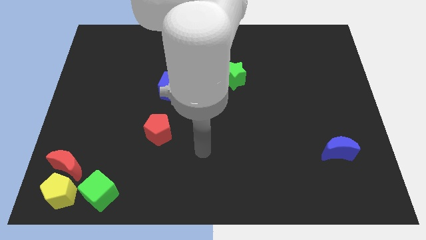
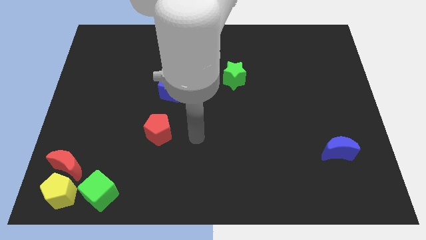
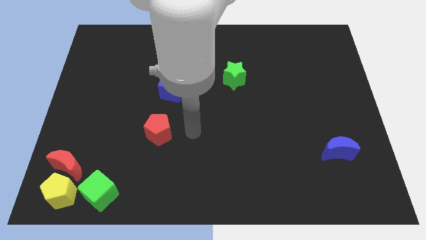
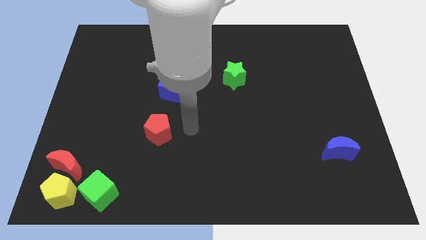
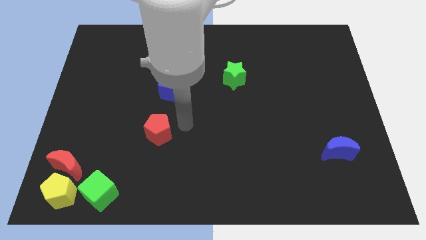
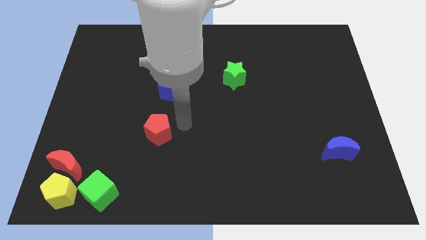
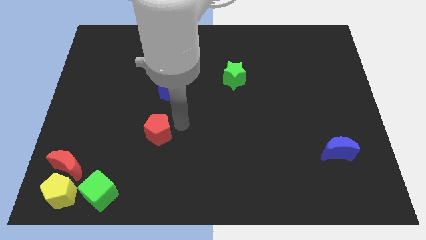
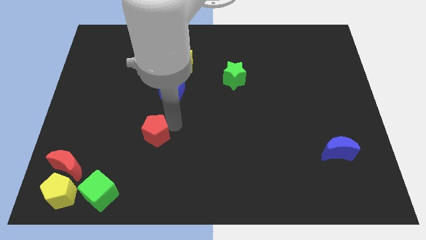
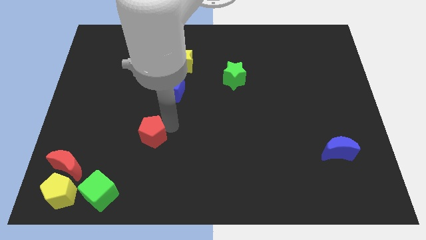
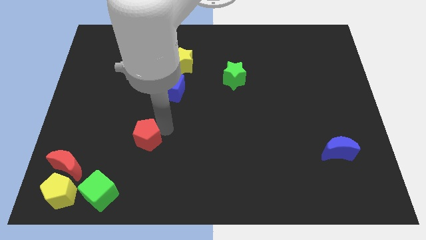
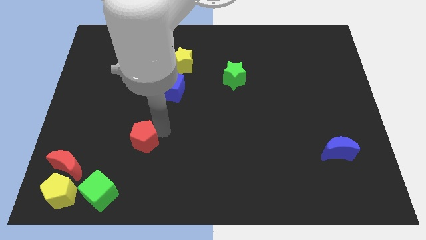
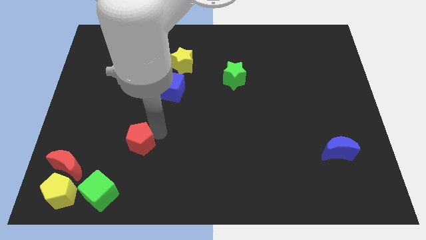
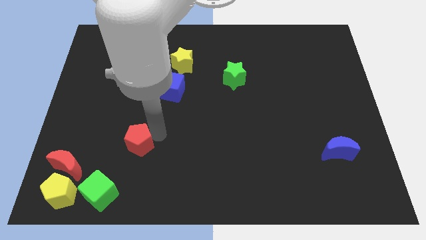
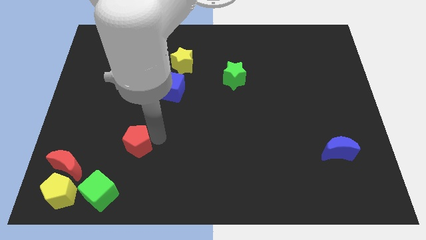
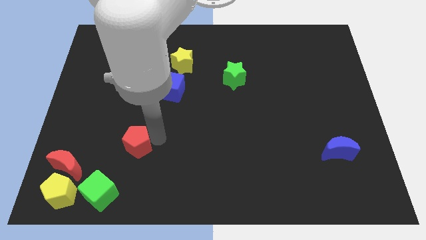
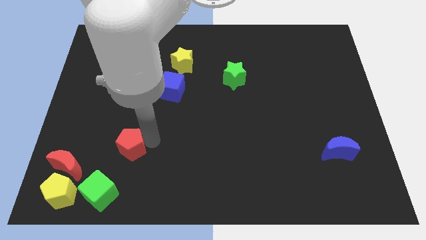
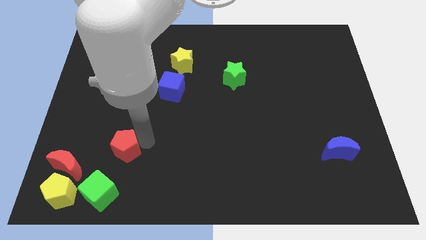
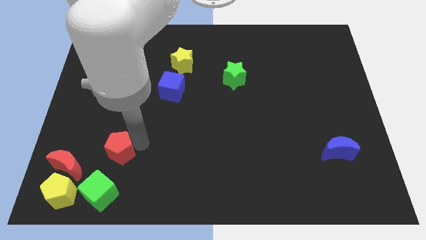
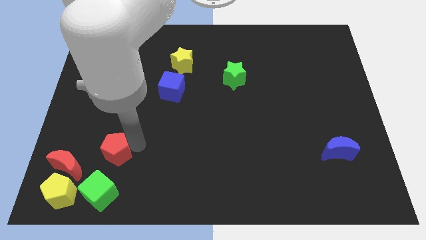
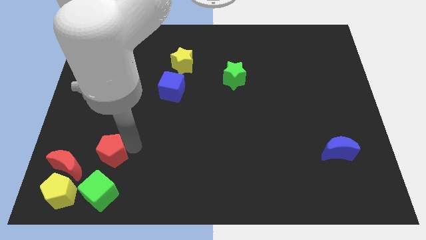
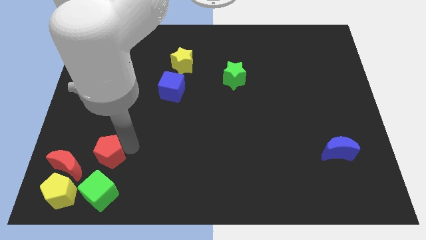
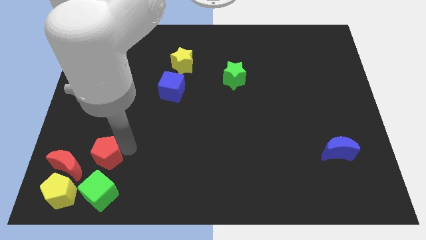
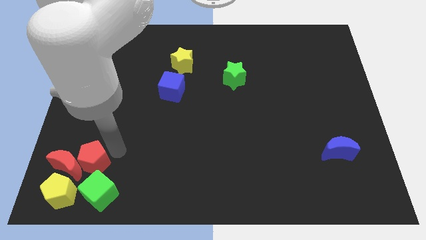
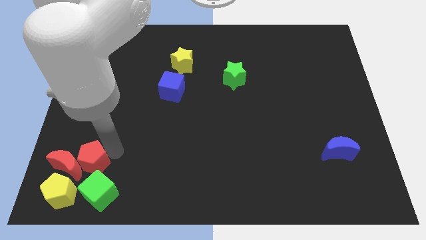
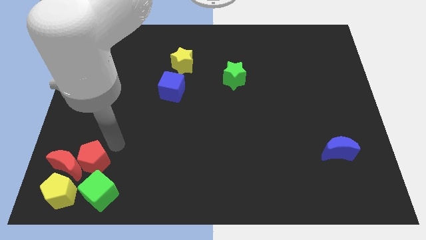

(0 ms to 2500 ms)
place the red pentagon above the green cube

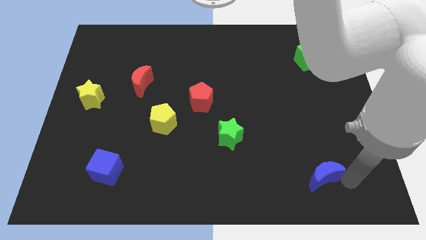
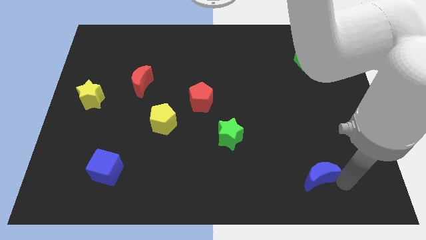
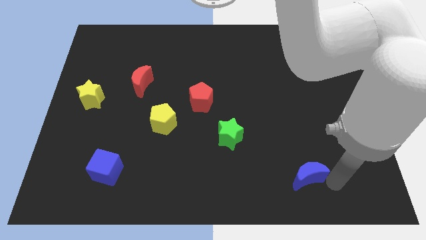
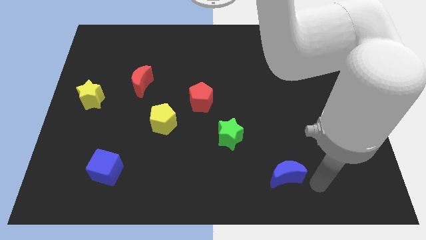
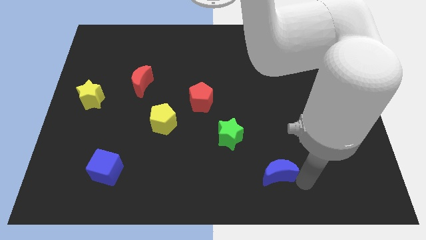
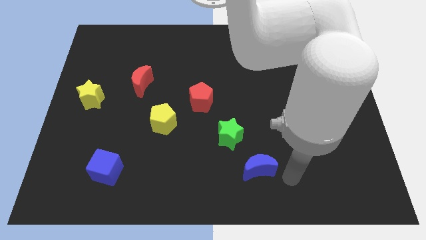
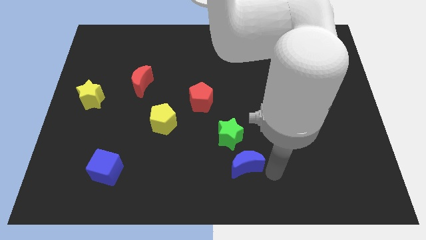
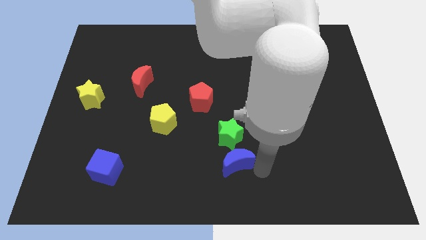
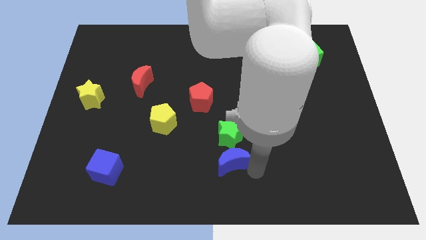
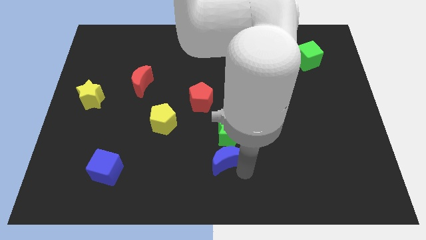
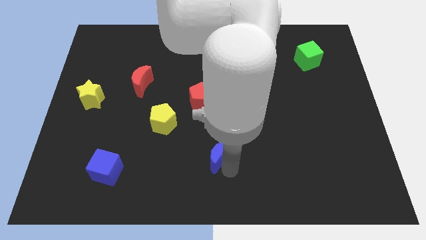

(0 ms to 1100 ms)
slide blue moon below the green star

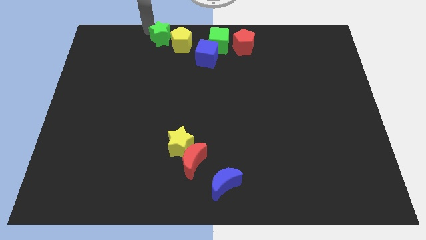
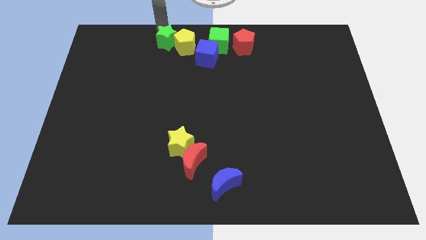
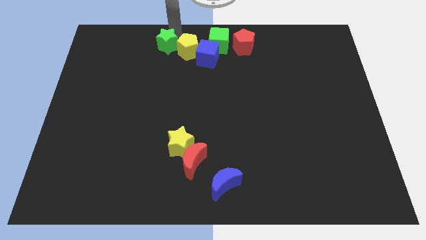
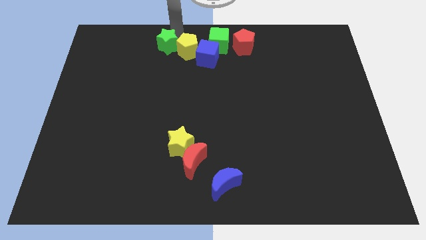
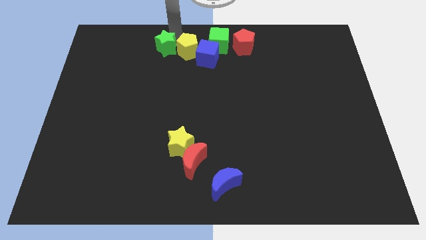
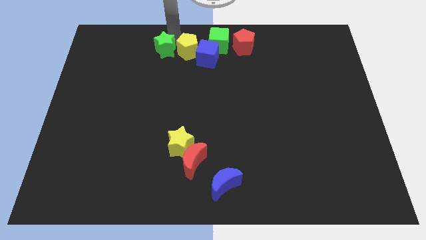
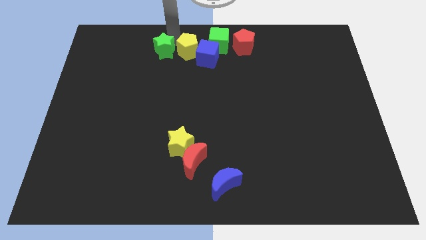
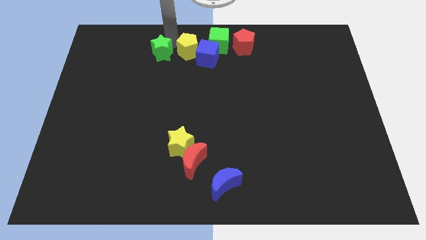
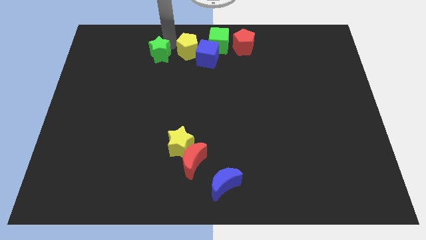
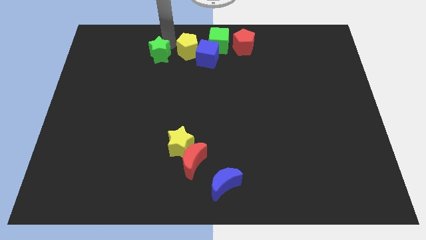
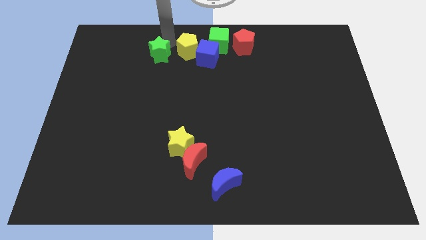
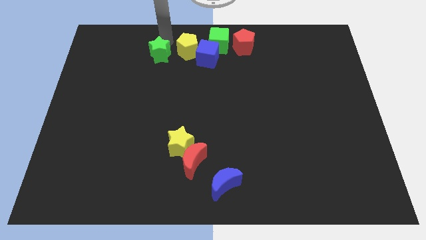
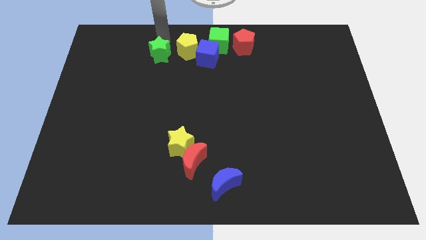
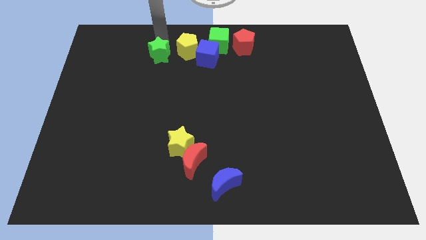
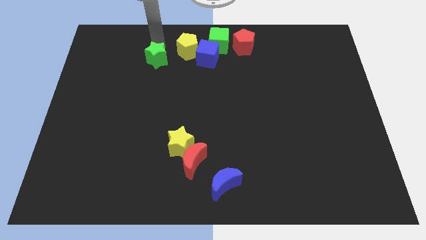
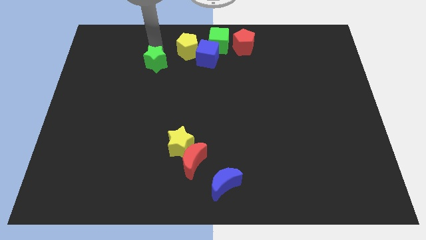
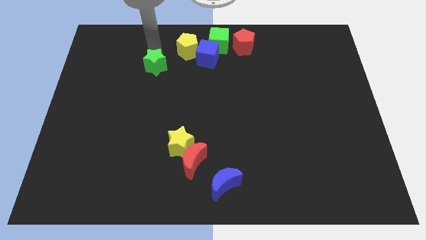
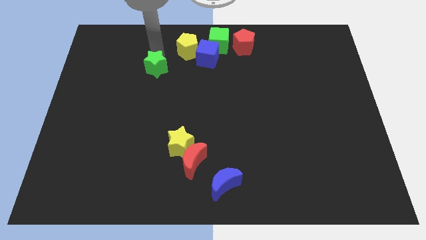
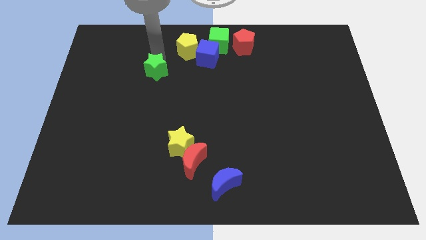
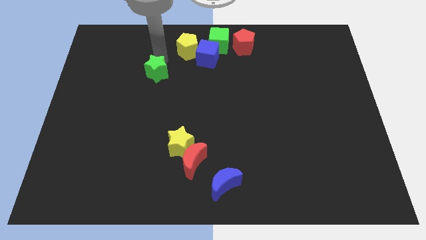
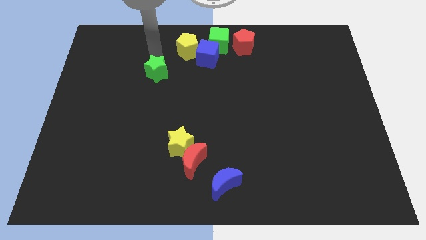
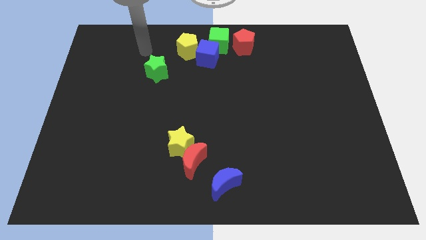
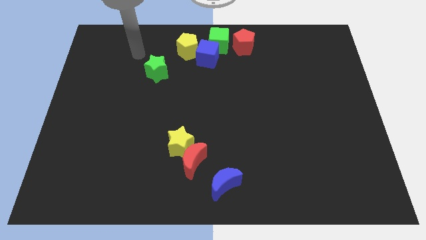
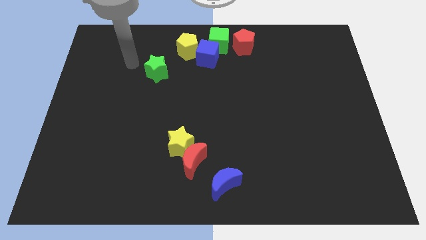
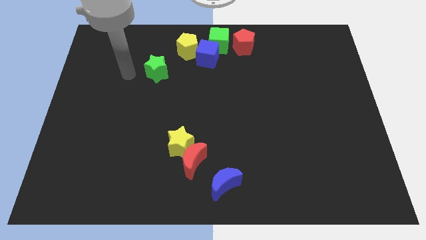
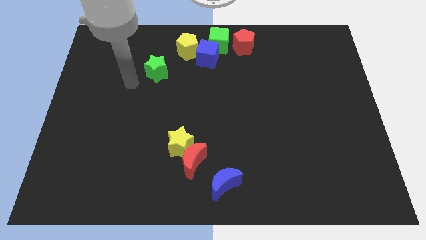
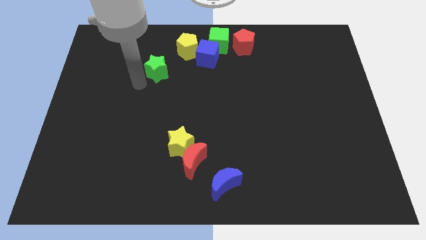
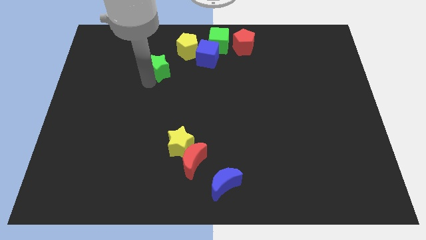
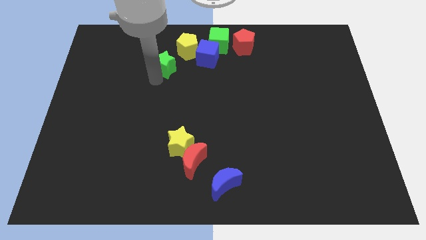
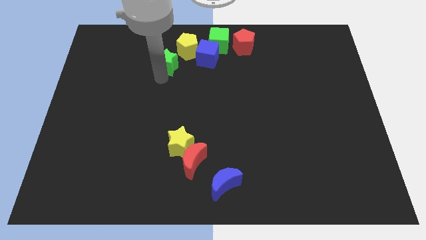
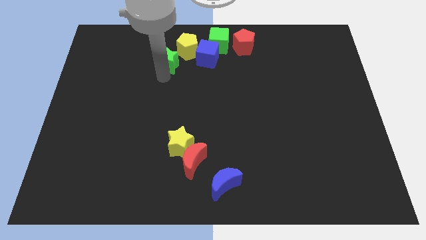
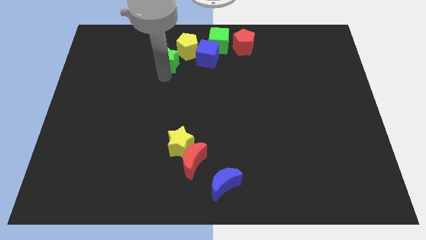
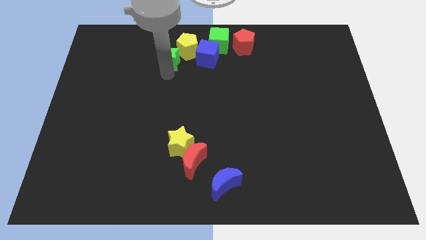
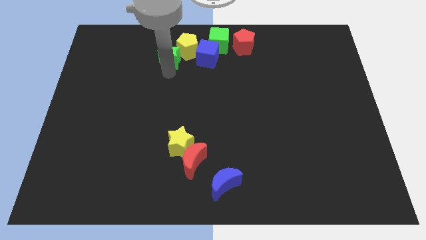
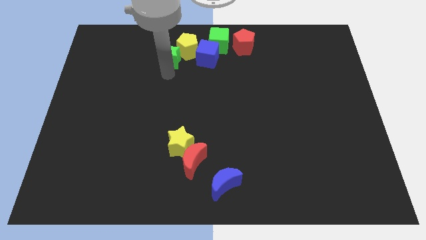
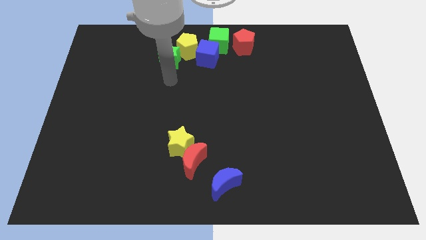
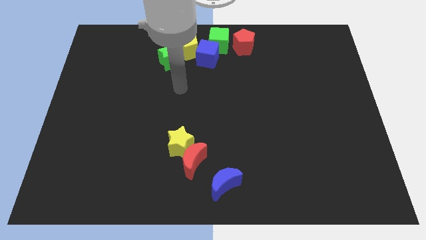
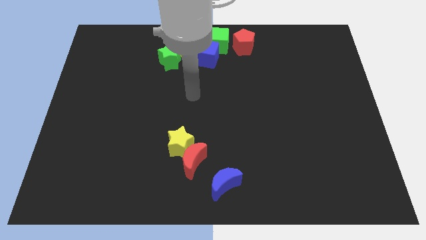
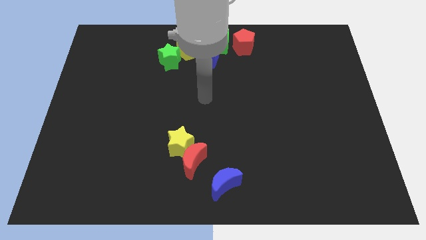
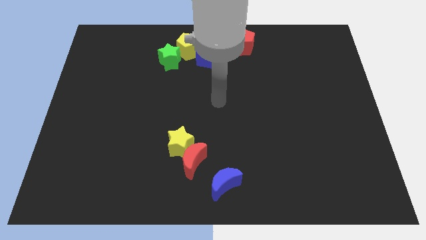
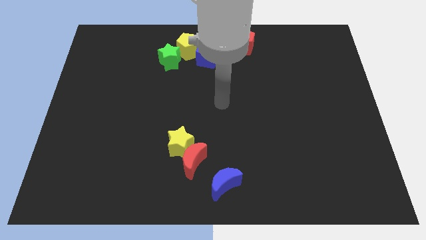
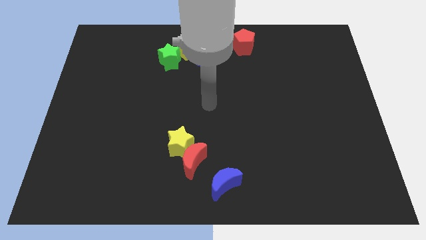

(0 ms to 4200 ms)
slightly push the green star down

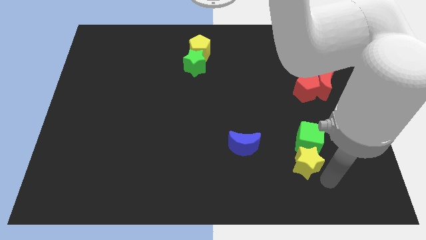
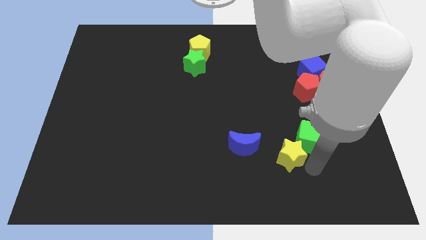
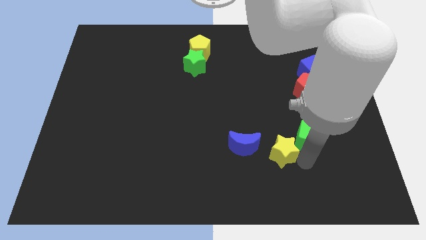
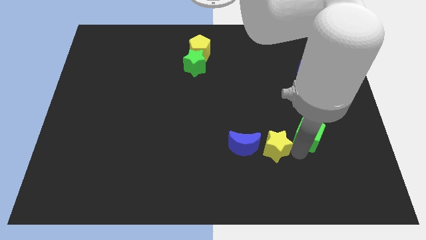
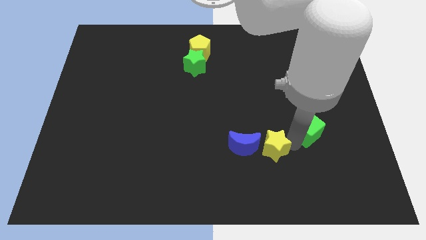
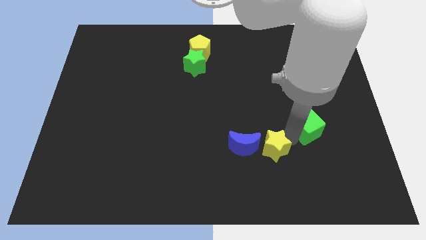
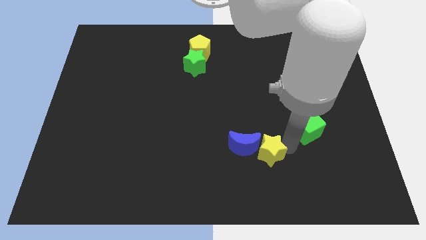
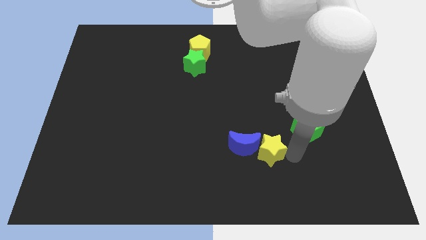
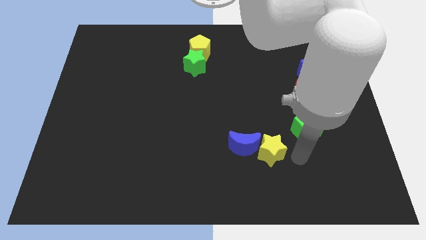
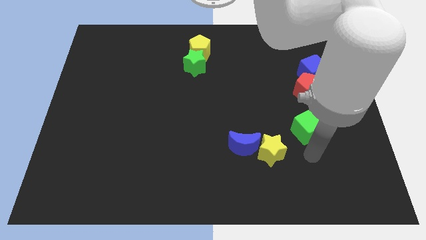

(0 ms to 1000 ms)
place the yellow star right to the blue moon

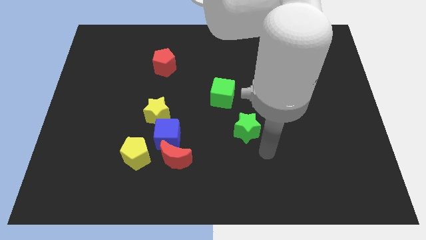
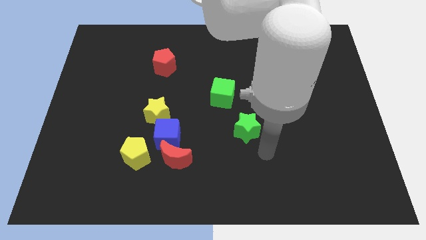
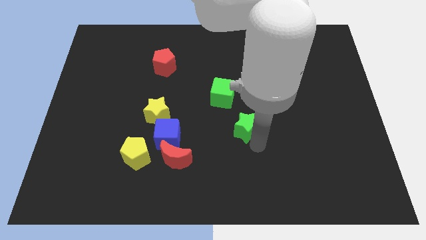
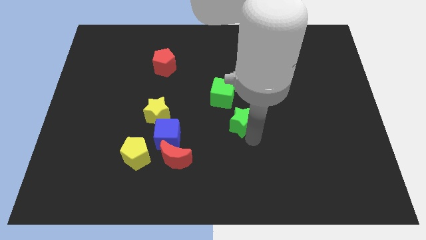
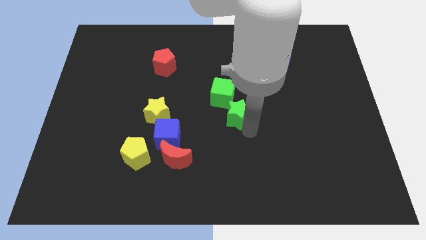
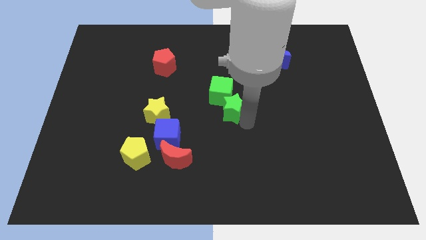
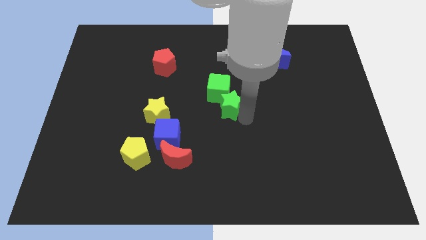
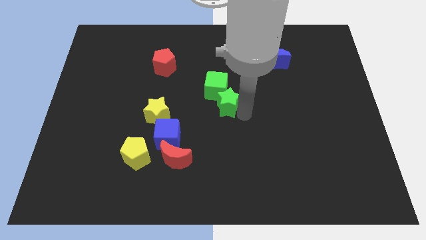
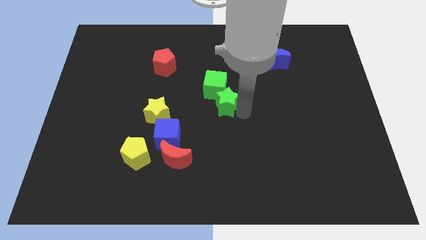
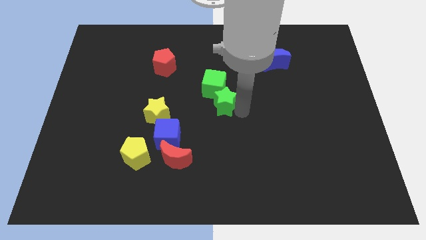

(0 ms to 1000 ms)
push green star in green cube
